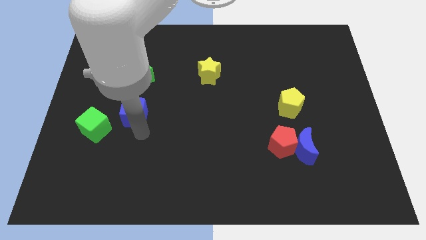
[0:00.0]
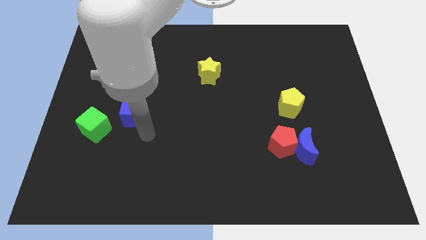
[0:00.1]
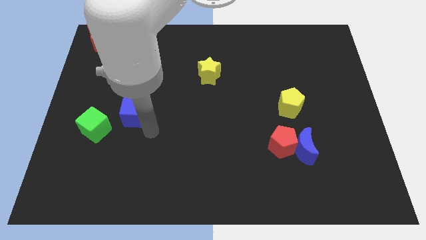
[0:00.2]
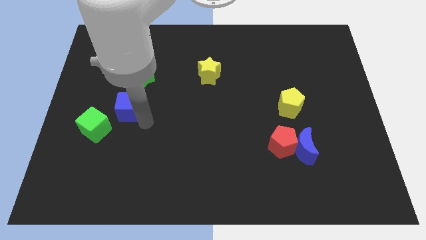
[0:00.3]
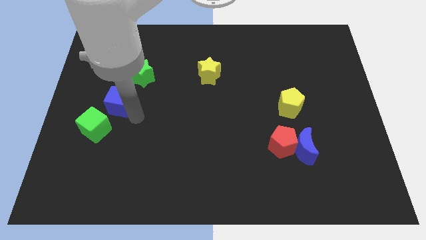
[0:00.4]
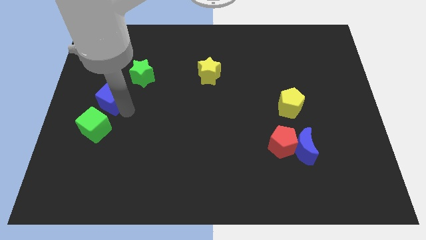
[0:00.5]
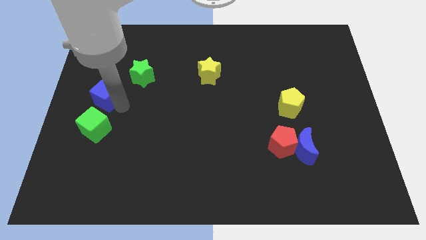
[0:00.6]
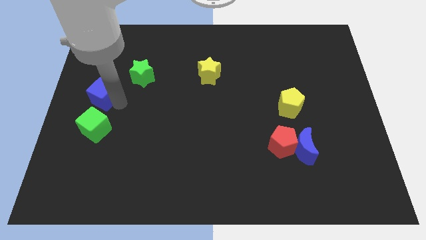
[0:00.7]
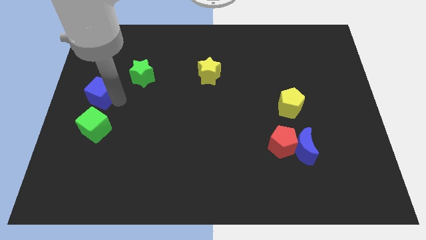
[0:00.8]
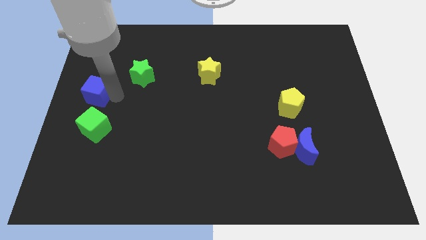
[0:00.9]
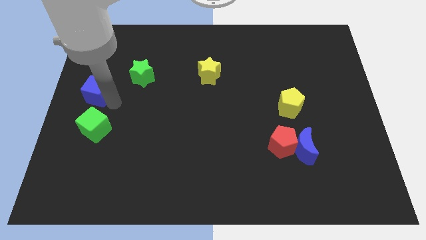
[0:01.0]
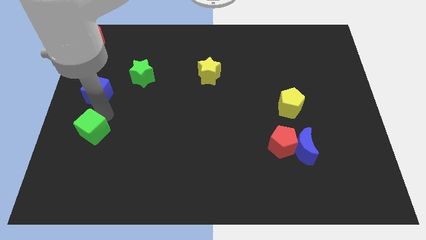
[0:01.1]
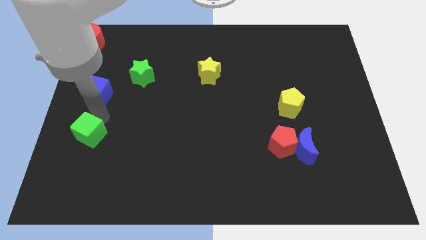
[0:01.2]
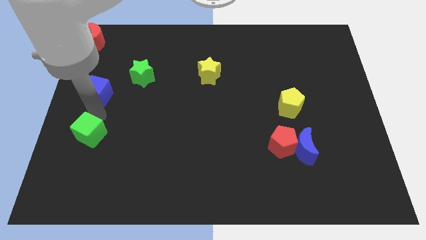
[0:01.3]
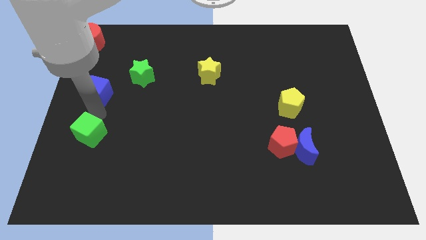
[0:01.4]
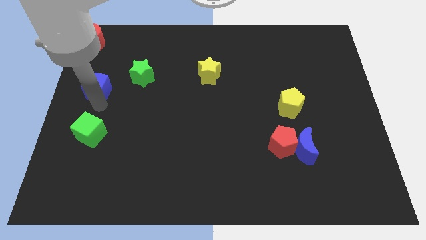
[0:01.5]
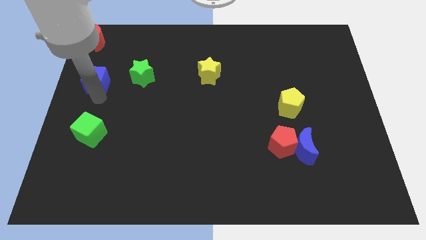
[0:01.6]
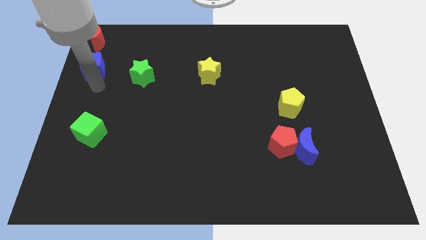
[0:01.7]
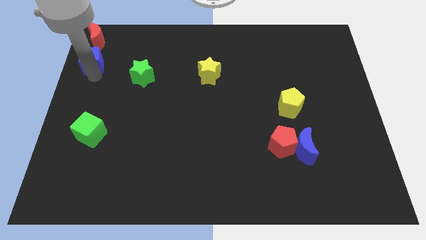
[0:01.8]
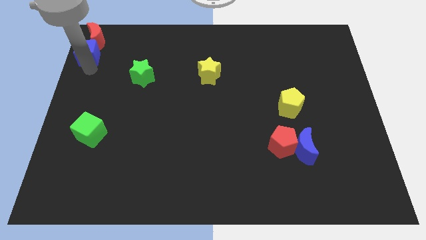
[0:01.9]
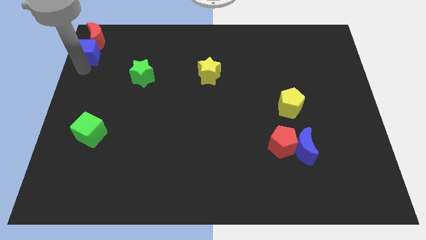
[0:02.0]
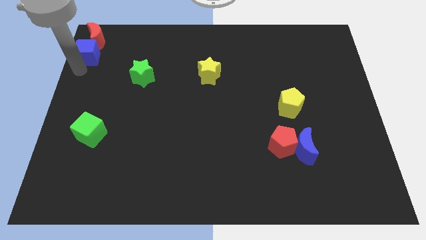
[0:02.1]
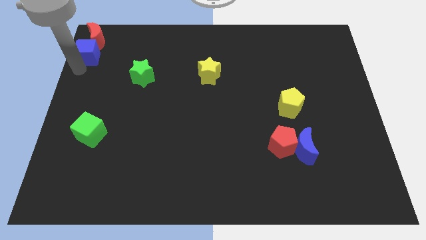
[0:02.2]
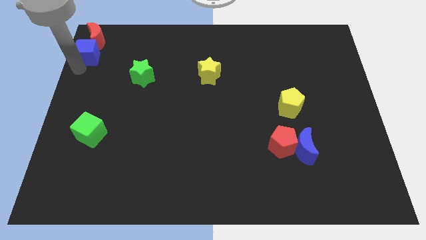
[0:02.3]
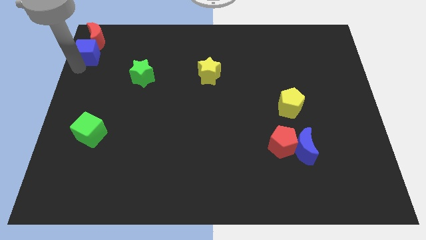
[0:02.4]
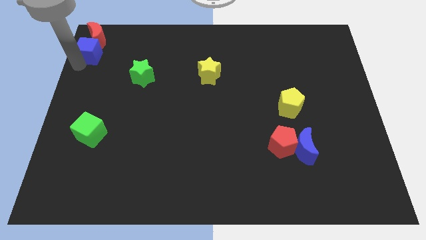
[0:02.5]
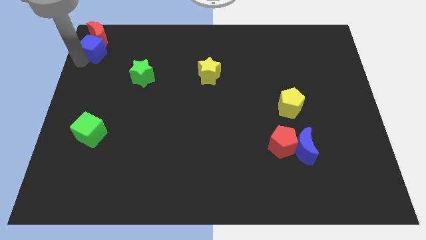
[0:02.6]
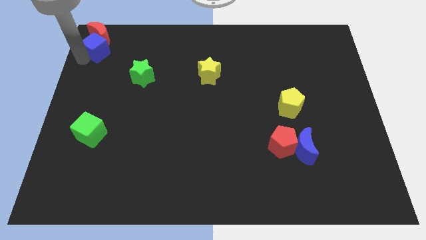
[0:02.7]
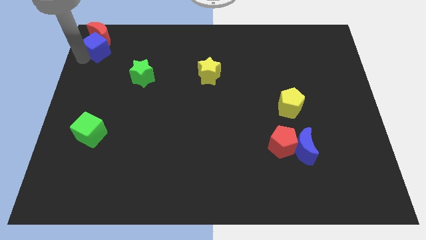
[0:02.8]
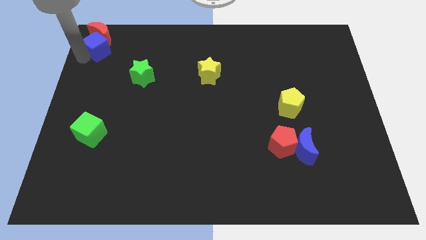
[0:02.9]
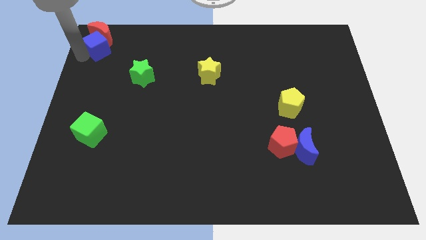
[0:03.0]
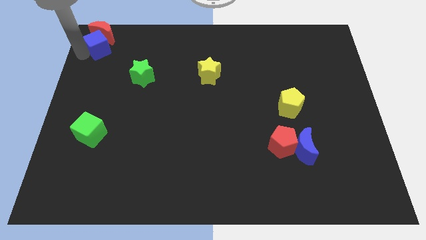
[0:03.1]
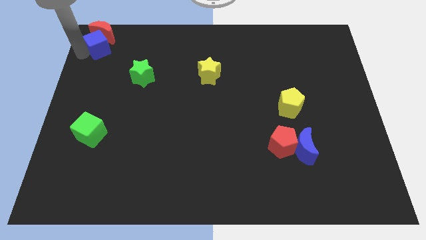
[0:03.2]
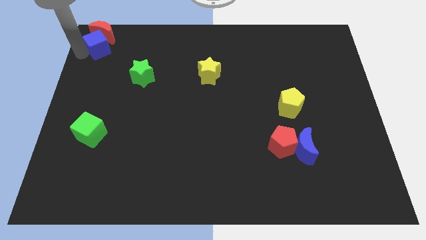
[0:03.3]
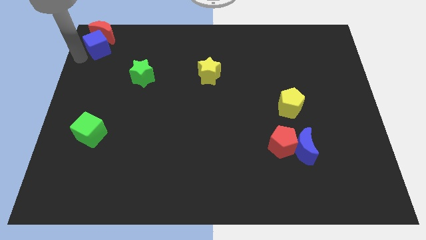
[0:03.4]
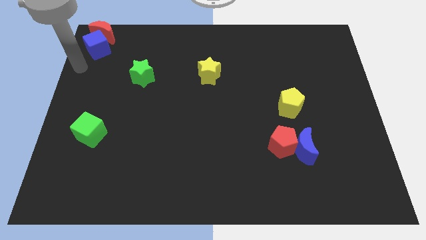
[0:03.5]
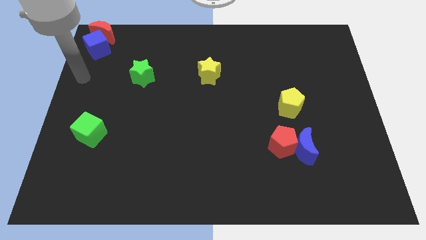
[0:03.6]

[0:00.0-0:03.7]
push the blue cube into the red crescent

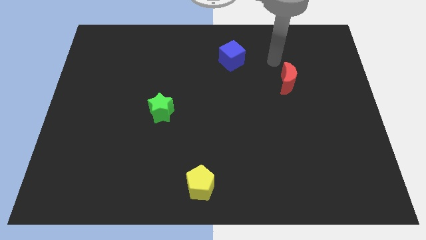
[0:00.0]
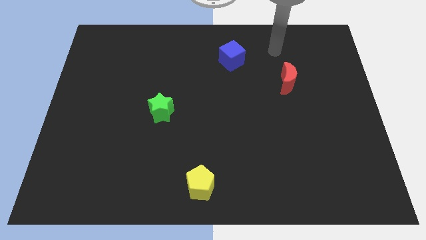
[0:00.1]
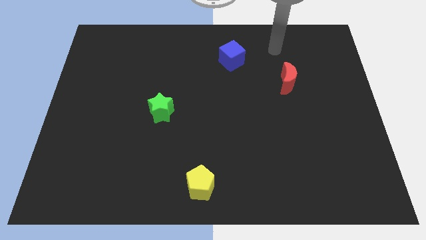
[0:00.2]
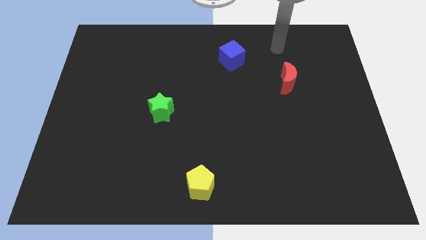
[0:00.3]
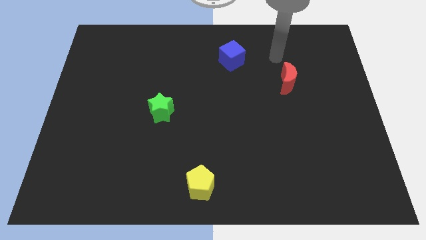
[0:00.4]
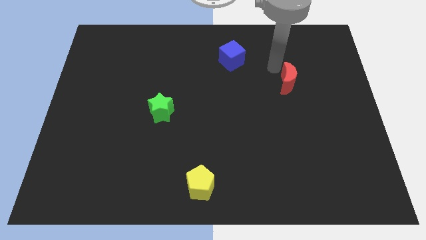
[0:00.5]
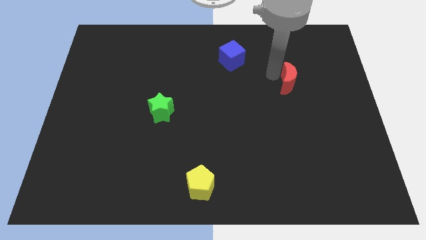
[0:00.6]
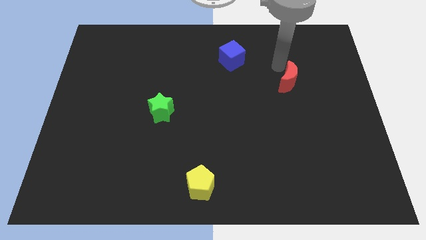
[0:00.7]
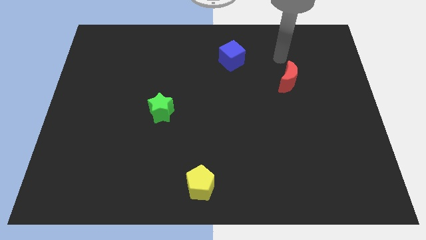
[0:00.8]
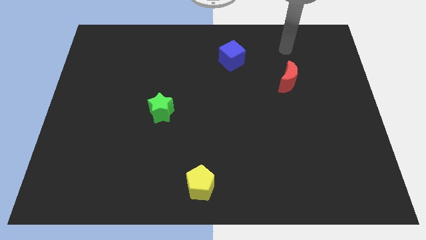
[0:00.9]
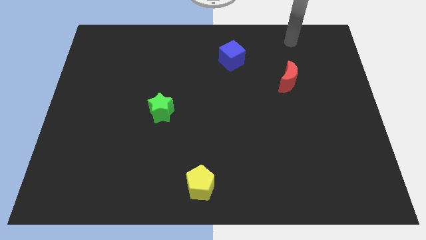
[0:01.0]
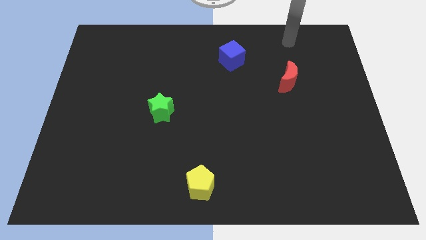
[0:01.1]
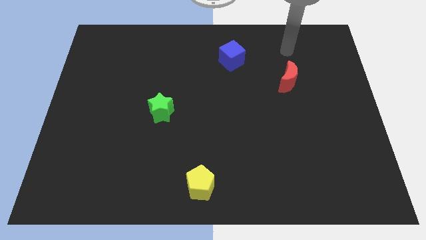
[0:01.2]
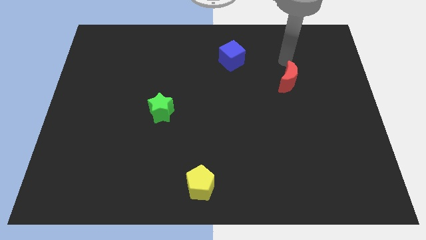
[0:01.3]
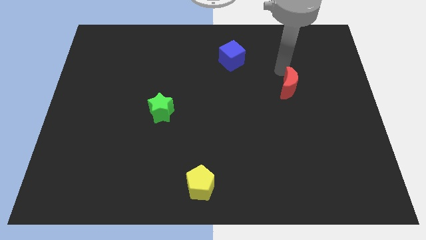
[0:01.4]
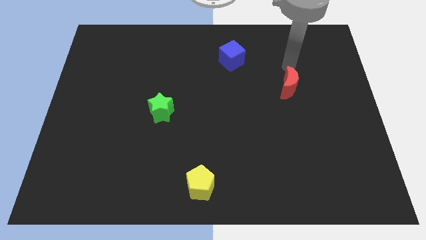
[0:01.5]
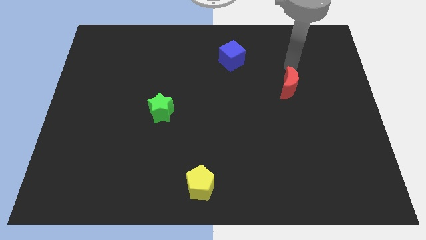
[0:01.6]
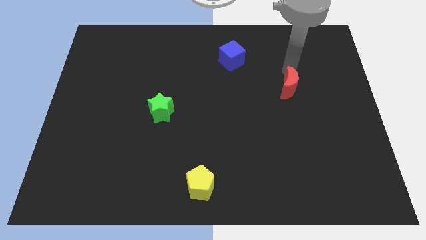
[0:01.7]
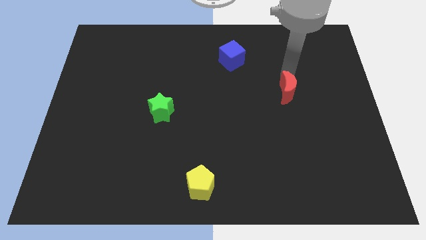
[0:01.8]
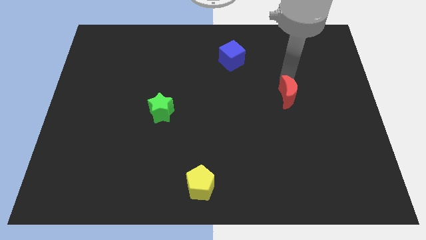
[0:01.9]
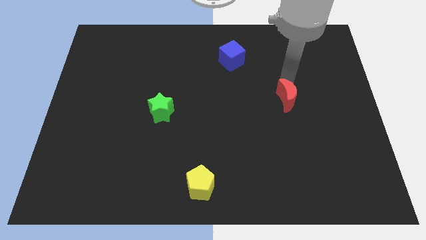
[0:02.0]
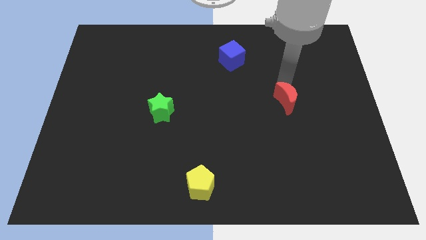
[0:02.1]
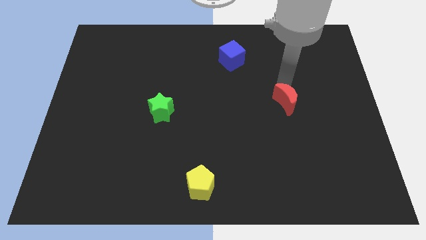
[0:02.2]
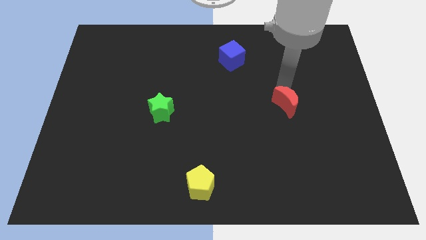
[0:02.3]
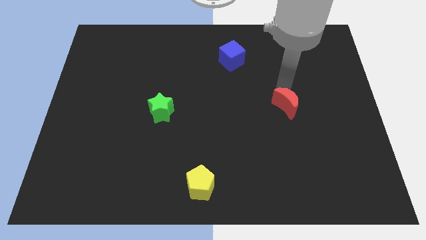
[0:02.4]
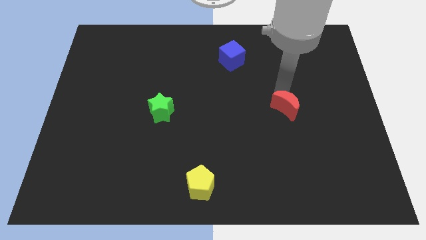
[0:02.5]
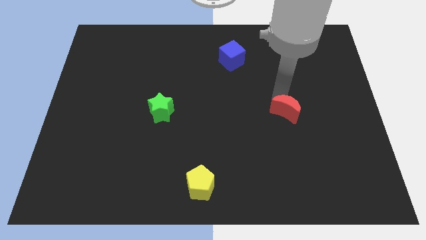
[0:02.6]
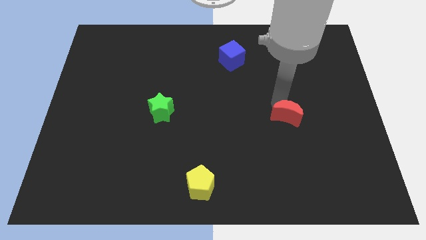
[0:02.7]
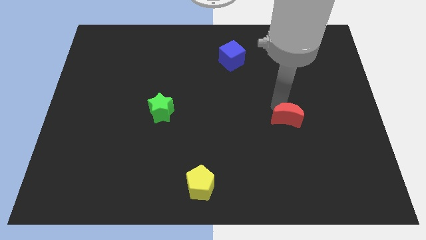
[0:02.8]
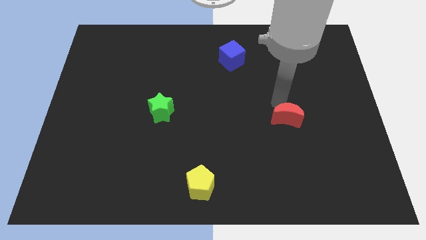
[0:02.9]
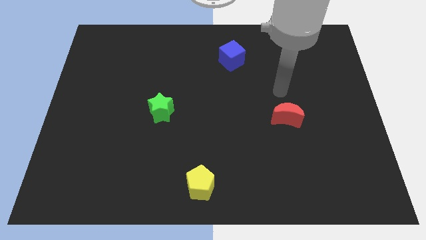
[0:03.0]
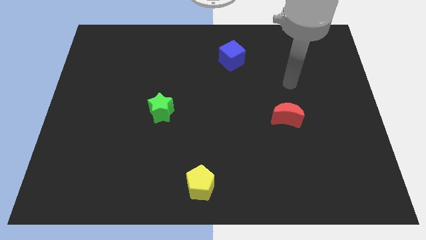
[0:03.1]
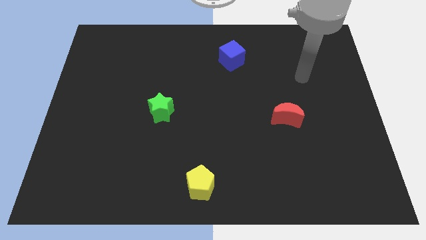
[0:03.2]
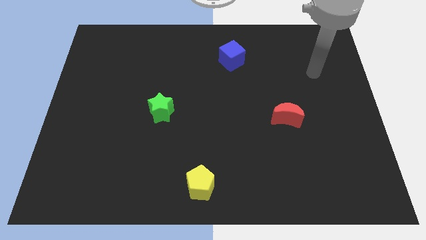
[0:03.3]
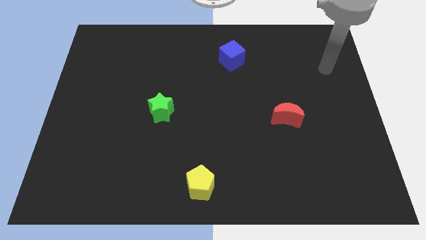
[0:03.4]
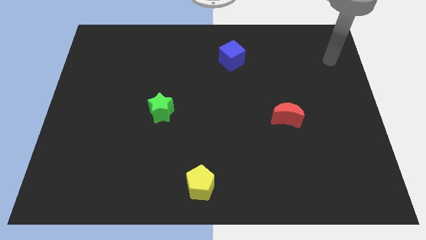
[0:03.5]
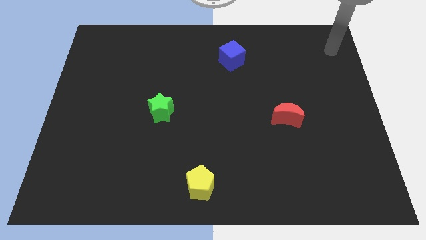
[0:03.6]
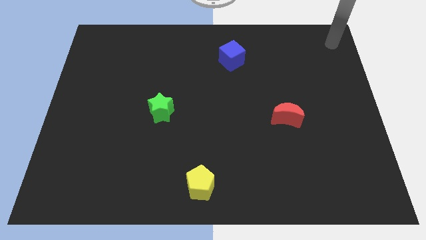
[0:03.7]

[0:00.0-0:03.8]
adjust the red crescent horizontally to the right of the green star

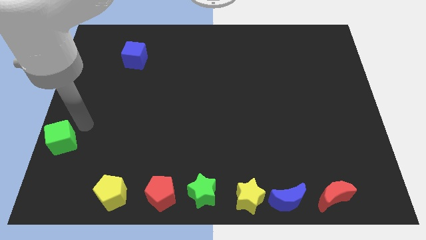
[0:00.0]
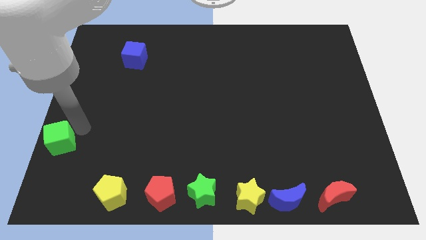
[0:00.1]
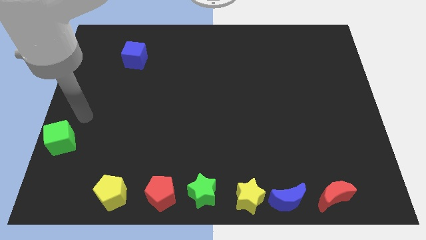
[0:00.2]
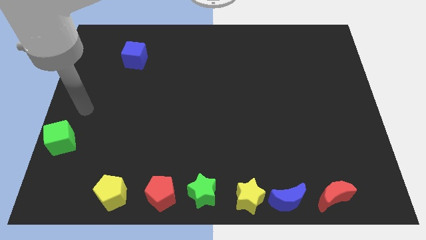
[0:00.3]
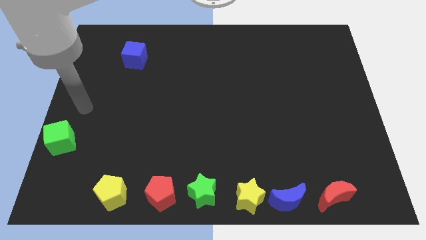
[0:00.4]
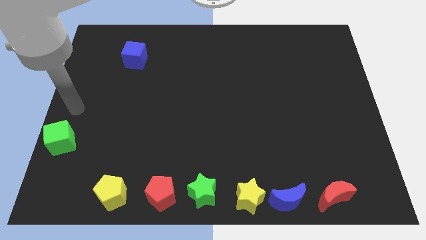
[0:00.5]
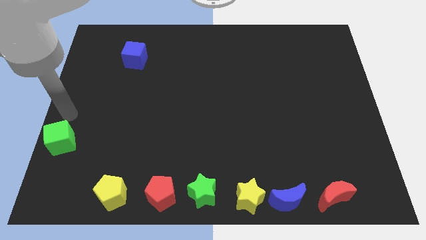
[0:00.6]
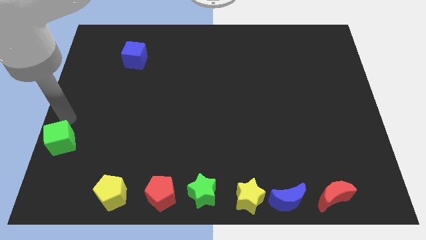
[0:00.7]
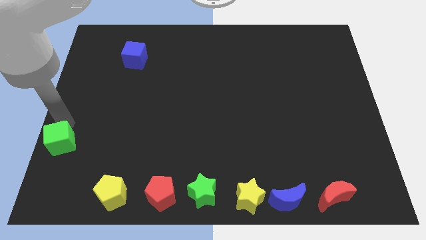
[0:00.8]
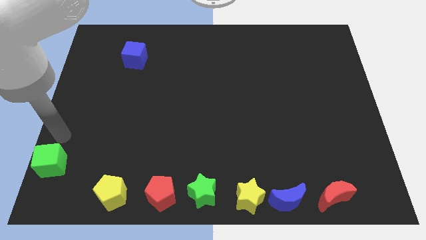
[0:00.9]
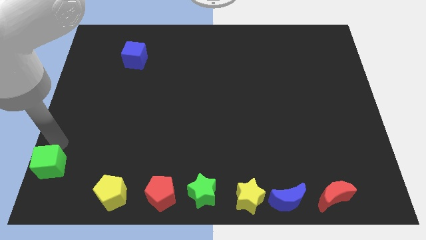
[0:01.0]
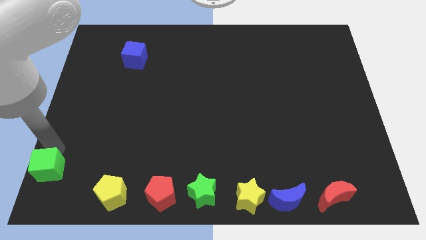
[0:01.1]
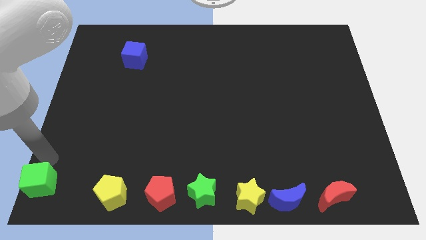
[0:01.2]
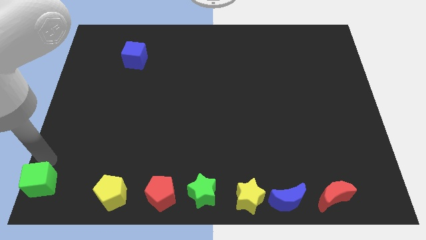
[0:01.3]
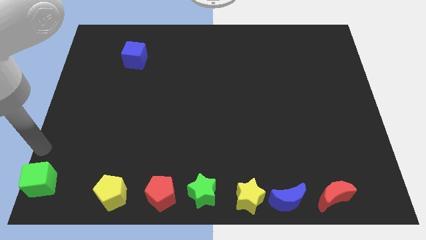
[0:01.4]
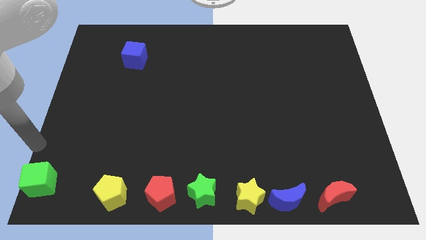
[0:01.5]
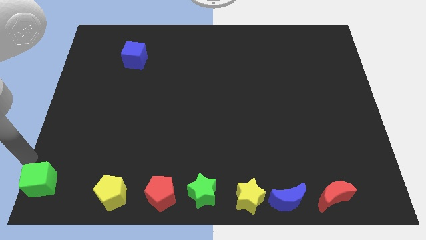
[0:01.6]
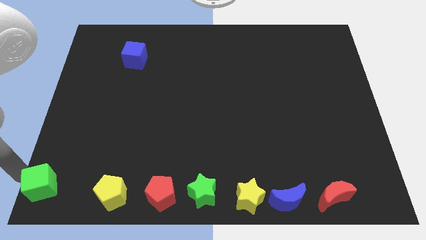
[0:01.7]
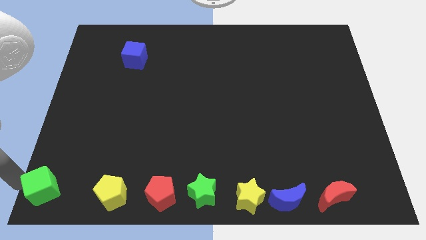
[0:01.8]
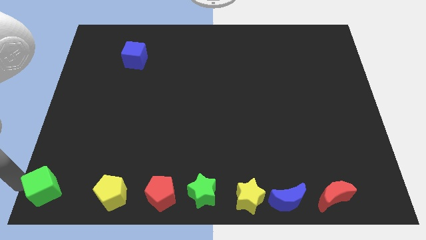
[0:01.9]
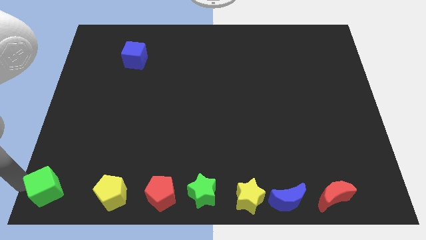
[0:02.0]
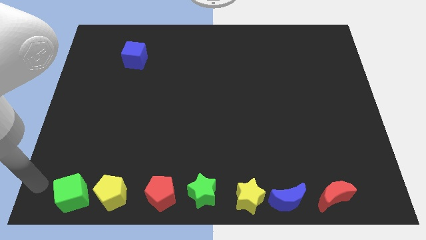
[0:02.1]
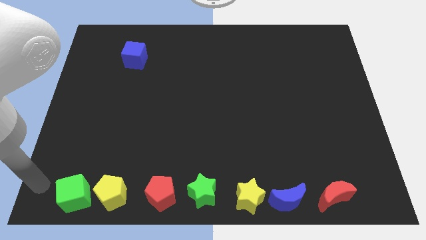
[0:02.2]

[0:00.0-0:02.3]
place the green cube at left side of the yellow pentagon
